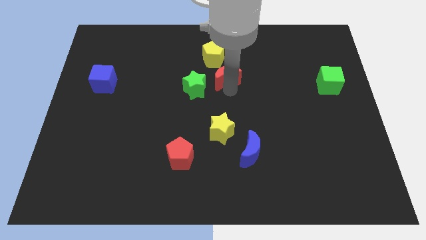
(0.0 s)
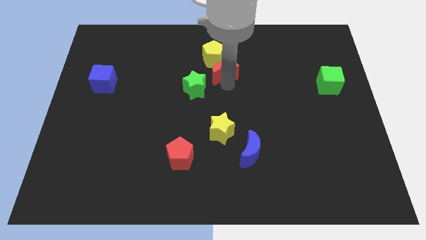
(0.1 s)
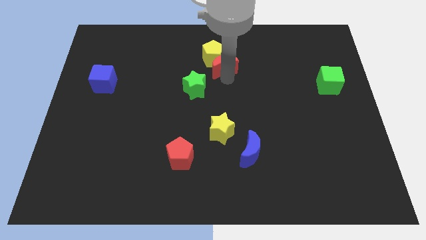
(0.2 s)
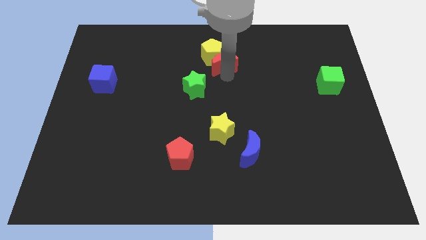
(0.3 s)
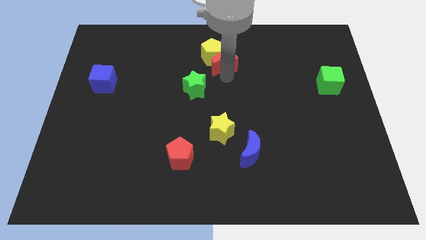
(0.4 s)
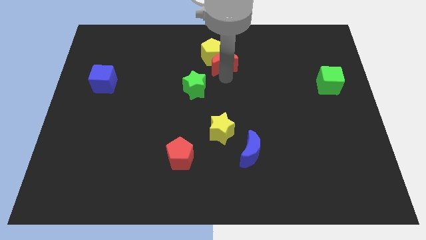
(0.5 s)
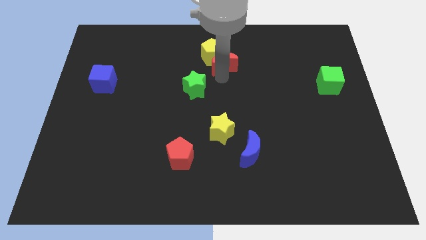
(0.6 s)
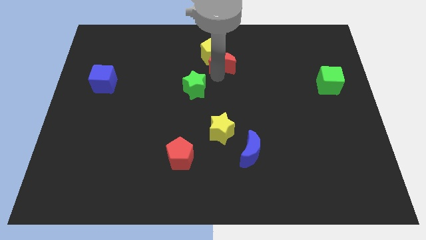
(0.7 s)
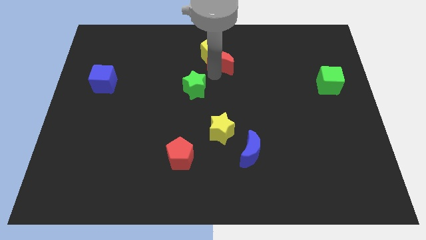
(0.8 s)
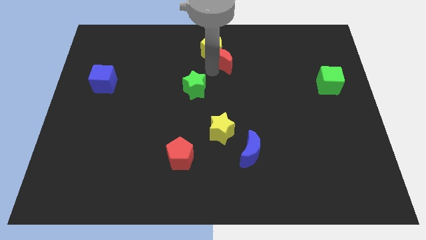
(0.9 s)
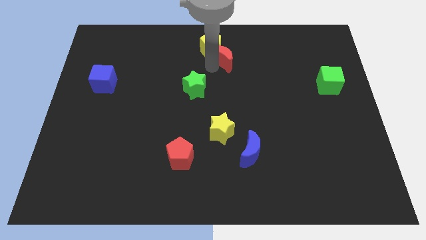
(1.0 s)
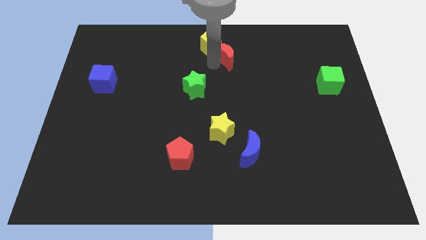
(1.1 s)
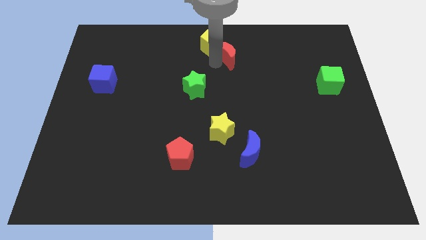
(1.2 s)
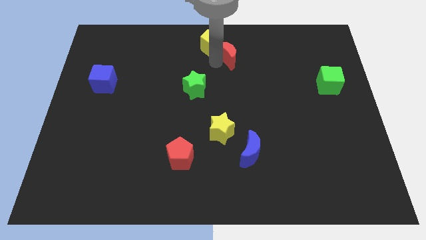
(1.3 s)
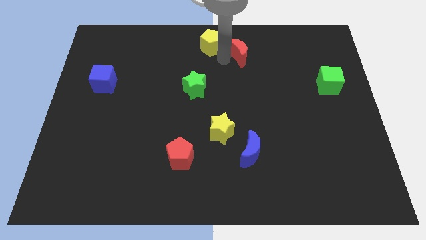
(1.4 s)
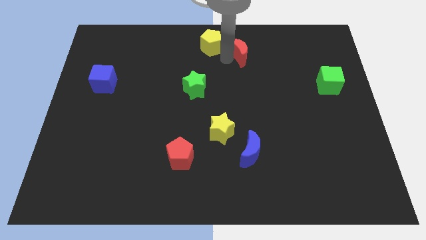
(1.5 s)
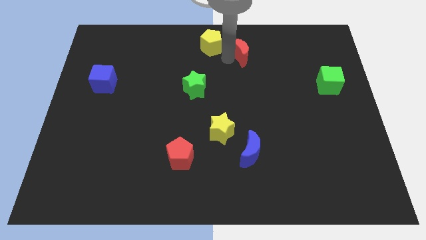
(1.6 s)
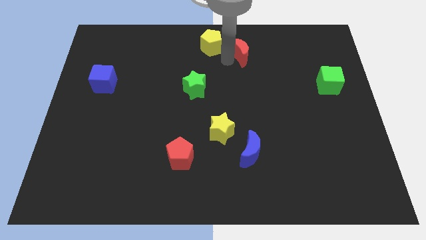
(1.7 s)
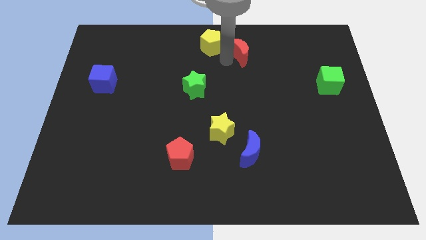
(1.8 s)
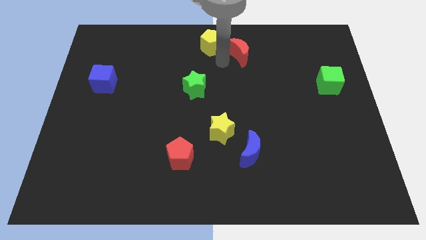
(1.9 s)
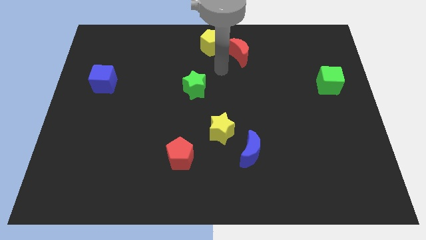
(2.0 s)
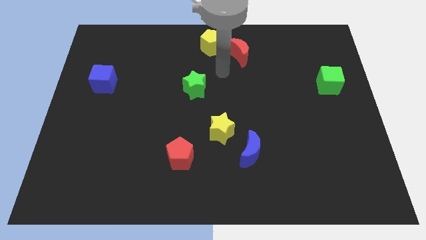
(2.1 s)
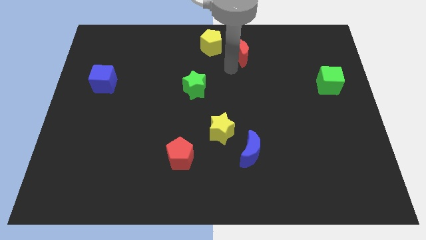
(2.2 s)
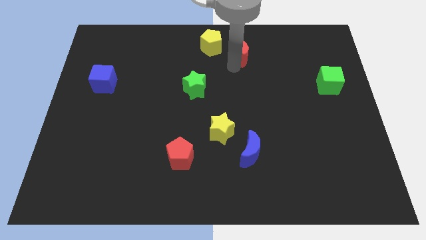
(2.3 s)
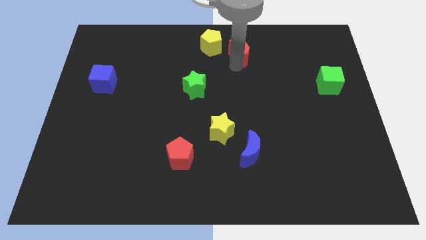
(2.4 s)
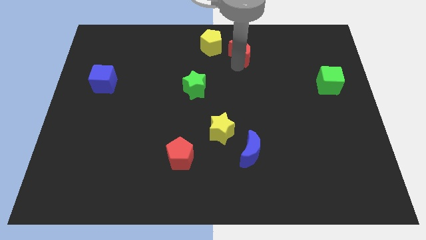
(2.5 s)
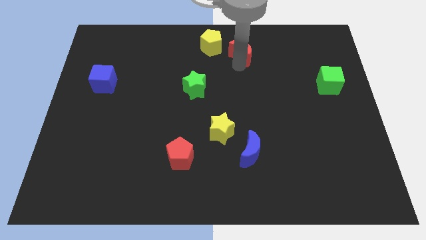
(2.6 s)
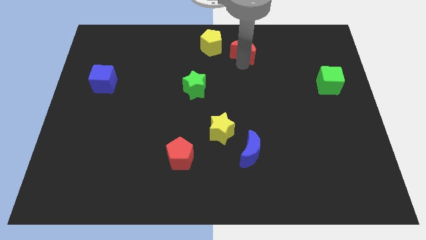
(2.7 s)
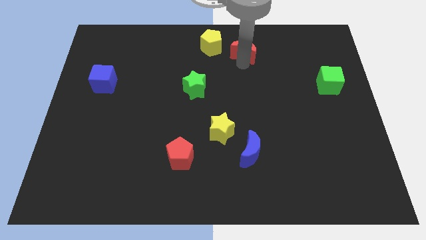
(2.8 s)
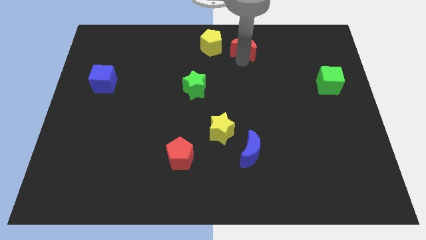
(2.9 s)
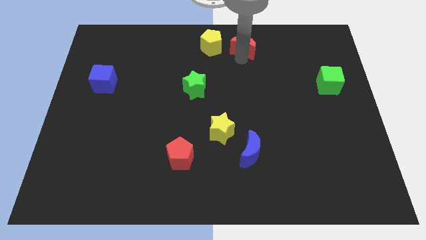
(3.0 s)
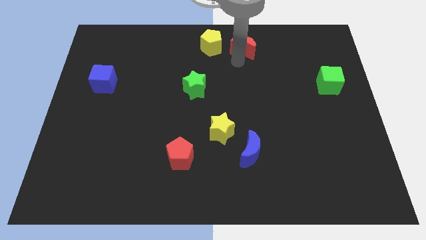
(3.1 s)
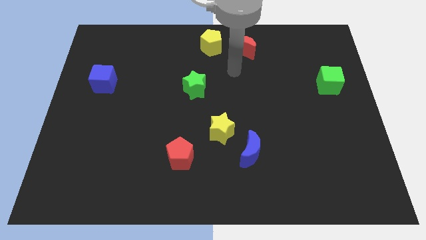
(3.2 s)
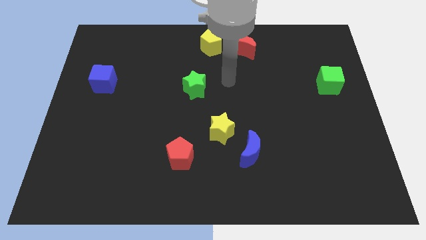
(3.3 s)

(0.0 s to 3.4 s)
place the red moon parallel to yellow pentagon

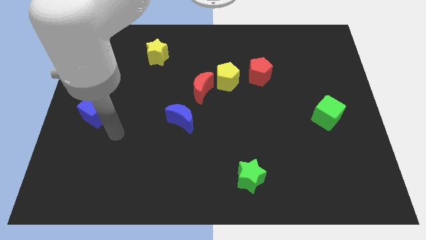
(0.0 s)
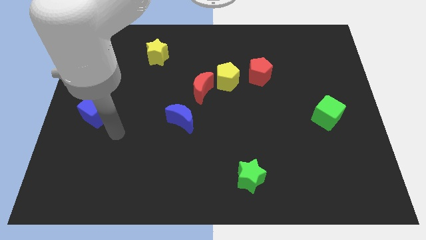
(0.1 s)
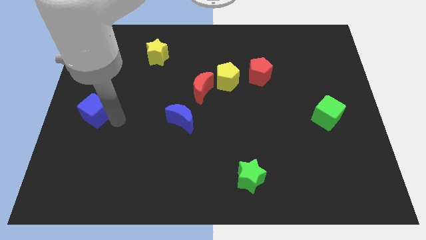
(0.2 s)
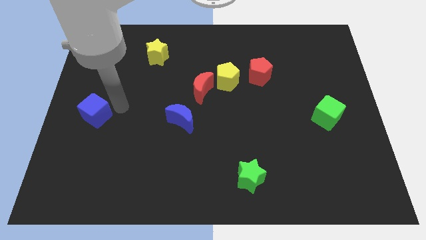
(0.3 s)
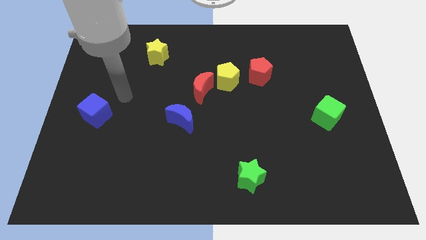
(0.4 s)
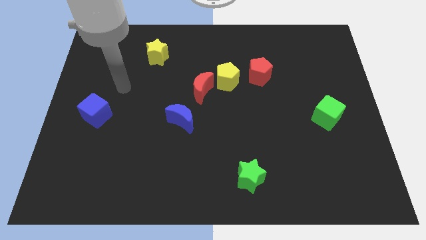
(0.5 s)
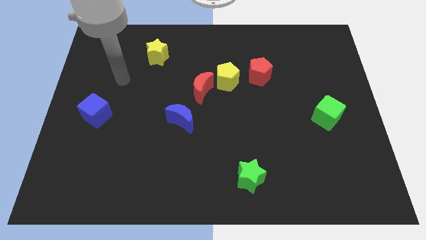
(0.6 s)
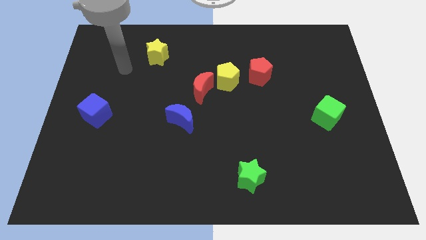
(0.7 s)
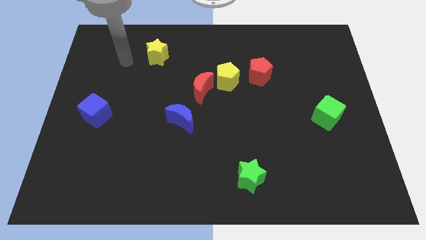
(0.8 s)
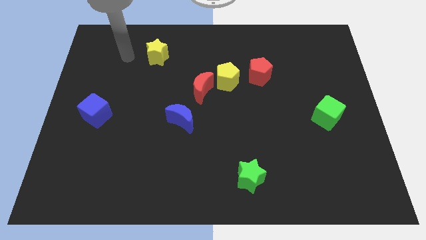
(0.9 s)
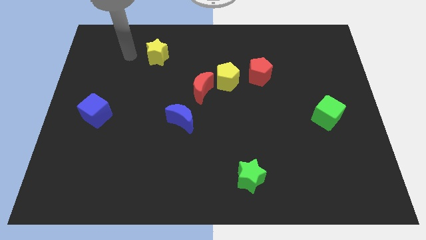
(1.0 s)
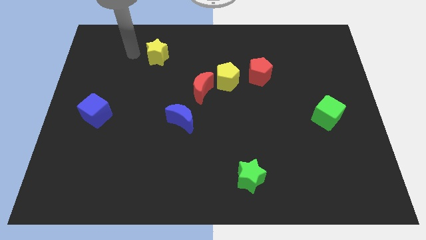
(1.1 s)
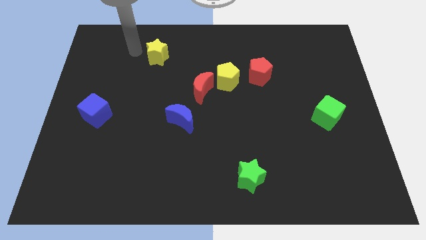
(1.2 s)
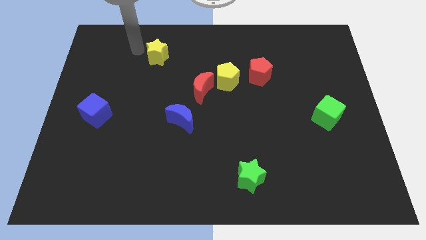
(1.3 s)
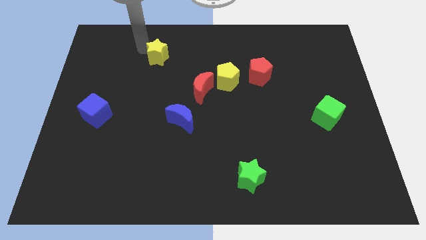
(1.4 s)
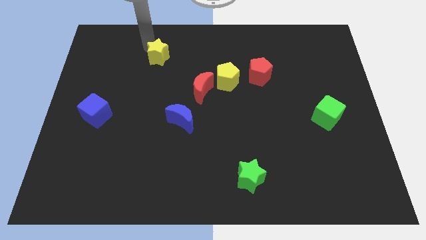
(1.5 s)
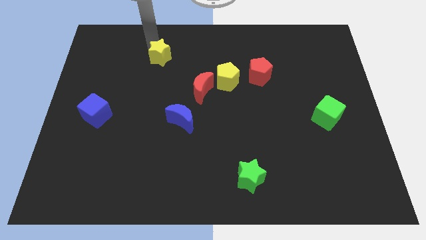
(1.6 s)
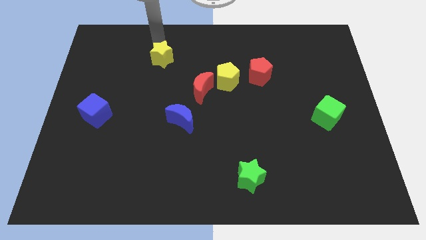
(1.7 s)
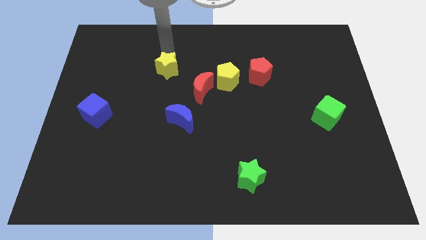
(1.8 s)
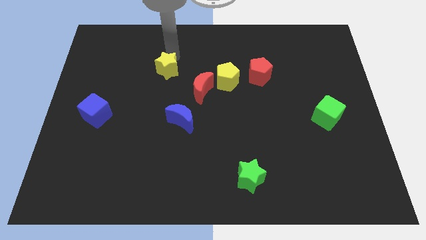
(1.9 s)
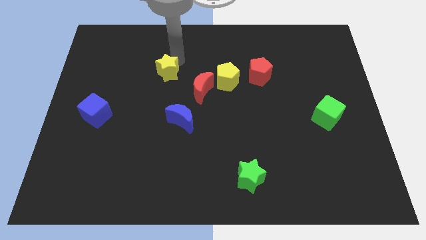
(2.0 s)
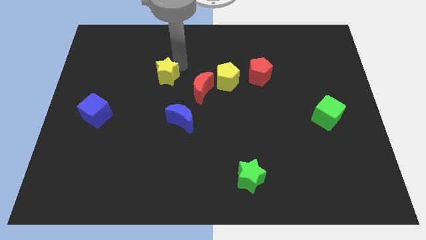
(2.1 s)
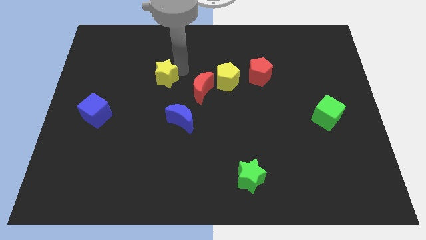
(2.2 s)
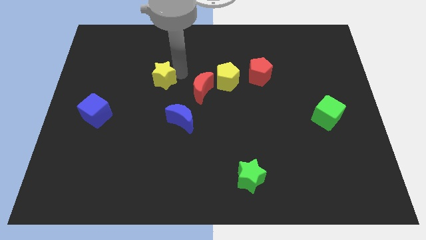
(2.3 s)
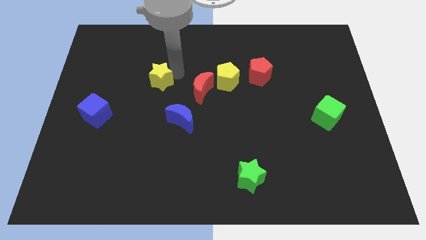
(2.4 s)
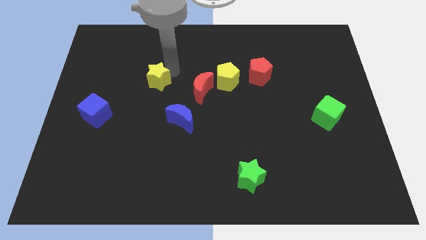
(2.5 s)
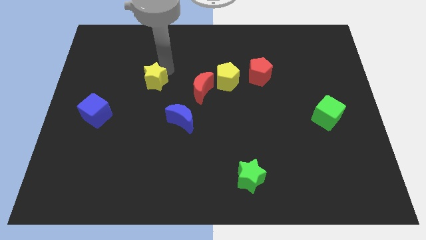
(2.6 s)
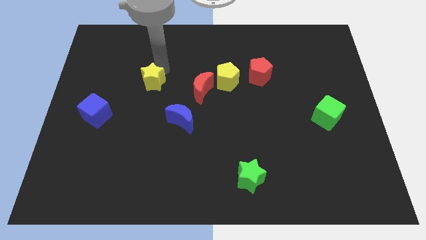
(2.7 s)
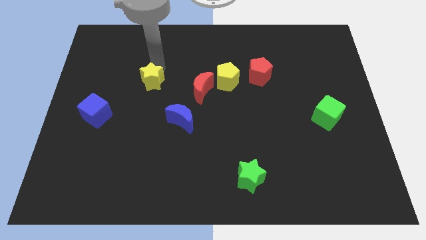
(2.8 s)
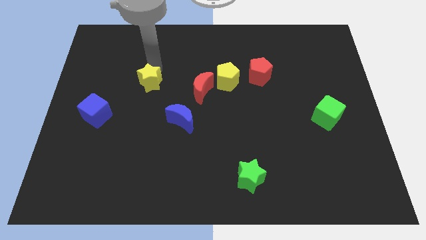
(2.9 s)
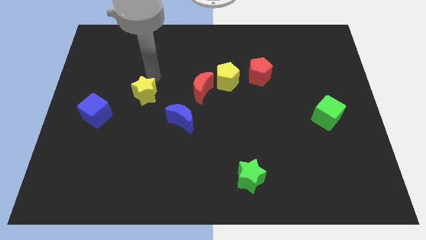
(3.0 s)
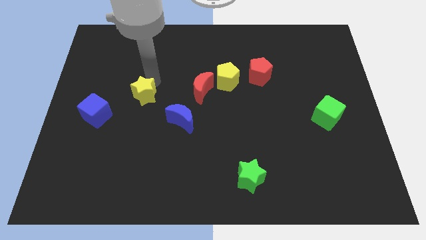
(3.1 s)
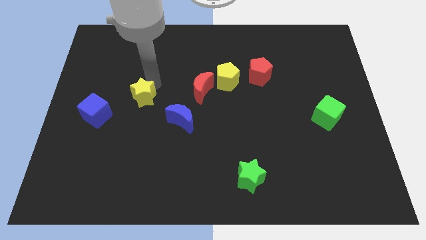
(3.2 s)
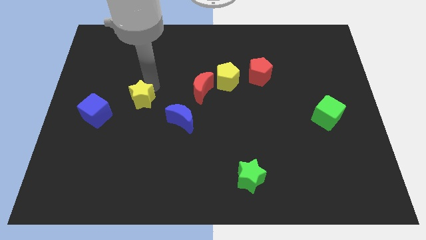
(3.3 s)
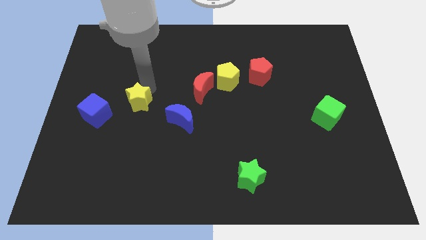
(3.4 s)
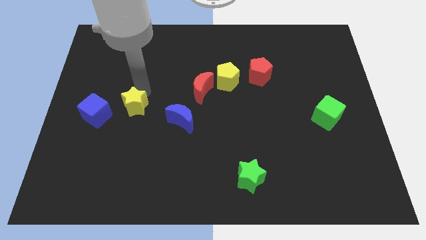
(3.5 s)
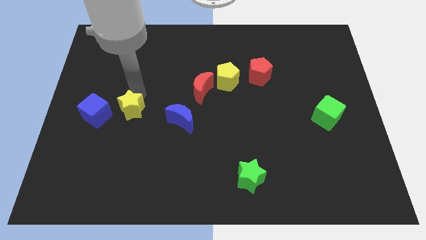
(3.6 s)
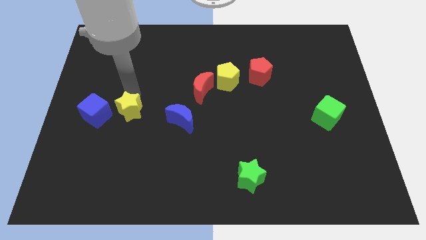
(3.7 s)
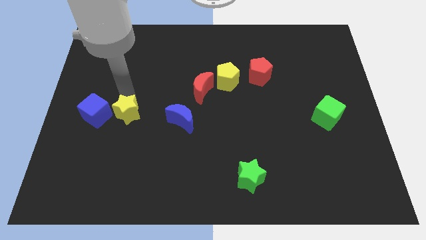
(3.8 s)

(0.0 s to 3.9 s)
place the yellow star close to the blue cube

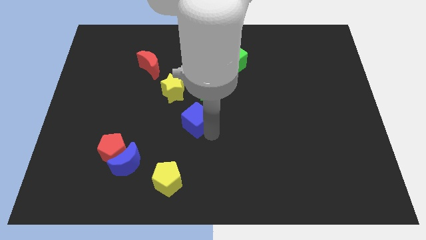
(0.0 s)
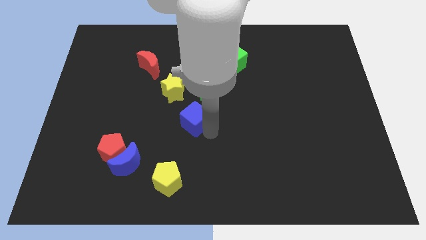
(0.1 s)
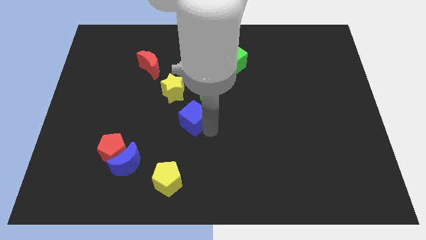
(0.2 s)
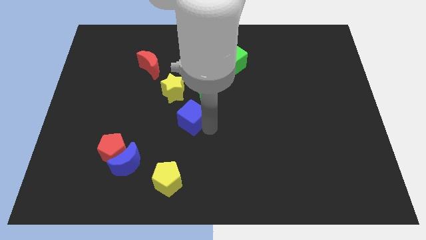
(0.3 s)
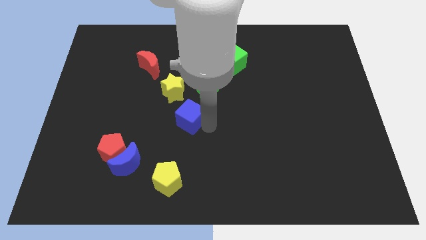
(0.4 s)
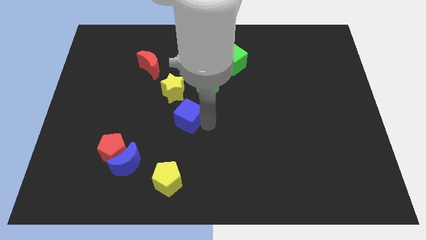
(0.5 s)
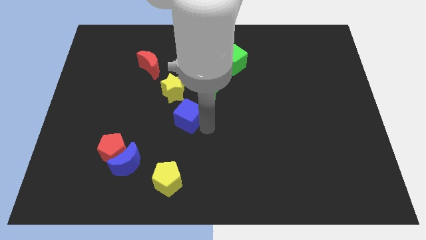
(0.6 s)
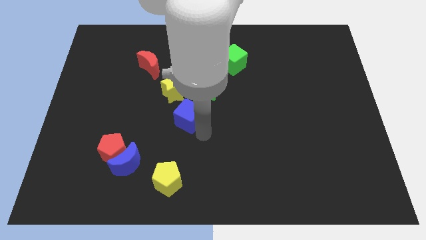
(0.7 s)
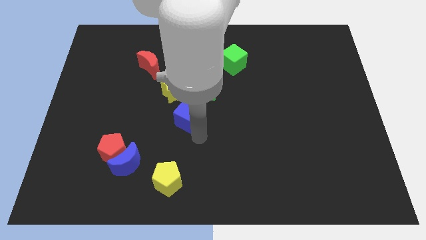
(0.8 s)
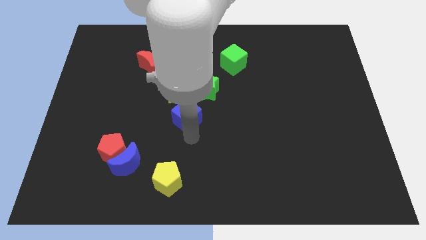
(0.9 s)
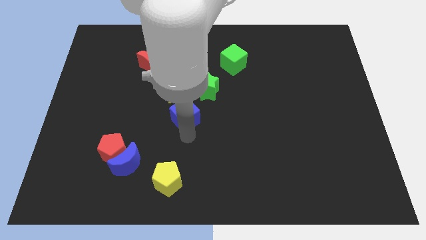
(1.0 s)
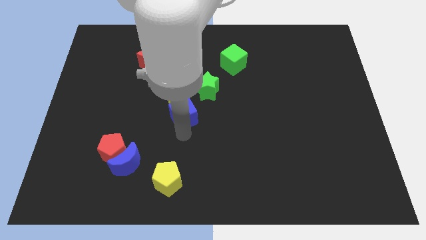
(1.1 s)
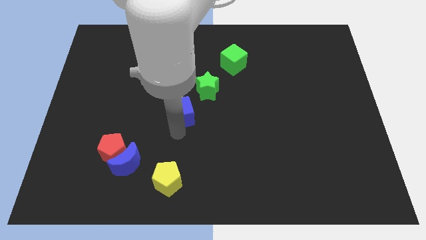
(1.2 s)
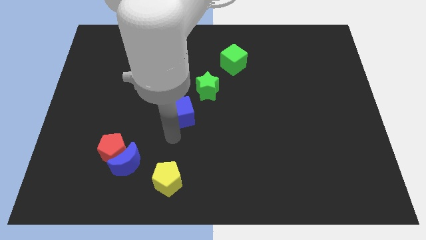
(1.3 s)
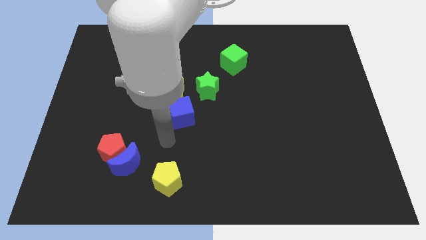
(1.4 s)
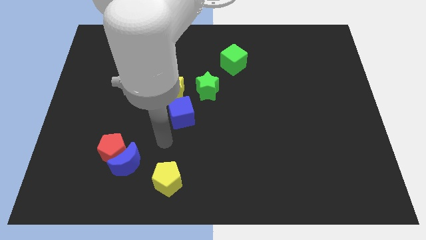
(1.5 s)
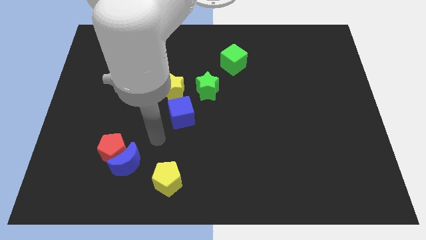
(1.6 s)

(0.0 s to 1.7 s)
place blue cube to the bottom of yellow star

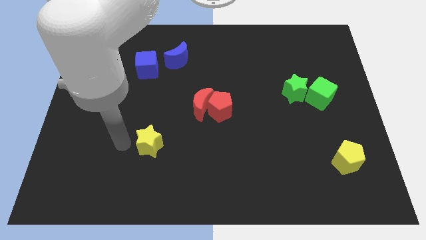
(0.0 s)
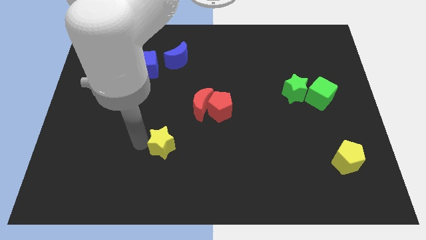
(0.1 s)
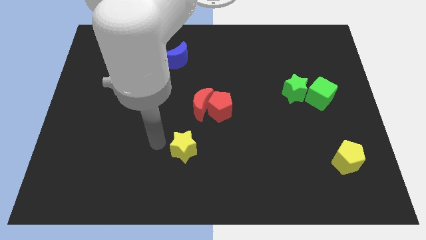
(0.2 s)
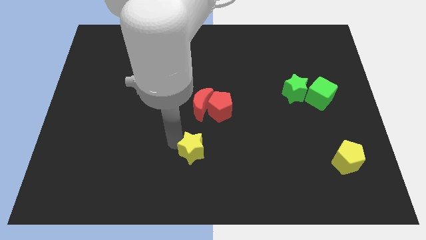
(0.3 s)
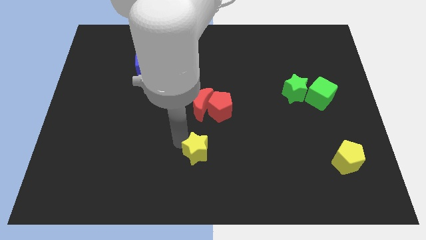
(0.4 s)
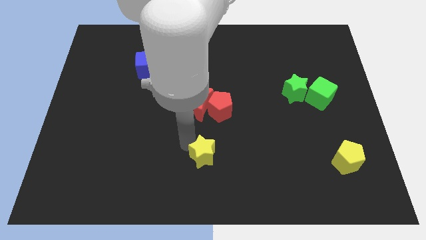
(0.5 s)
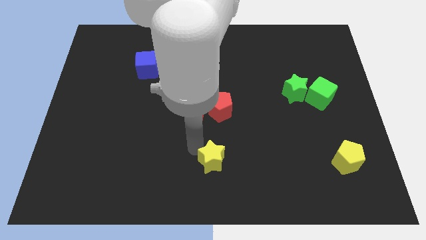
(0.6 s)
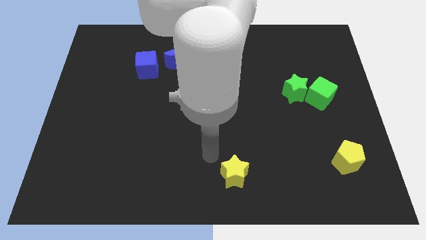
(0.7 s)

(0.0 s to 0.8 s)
push the yellow star to the bottom of the red pentagon
